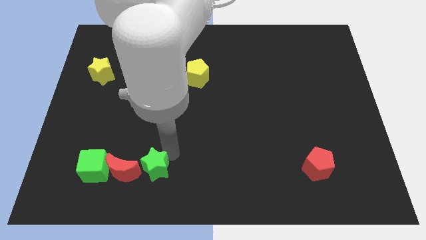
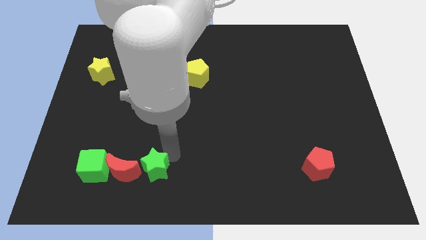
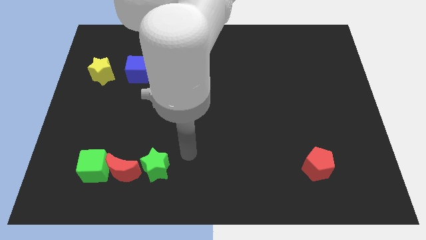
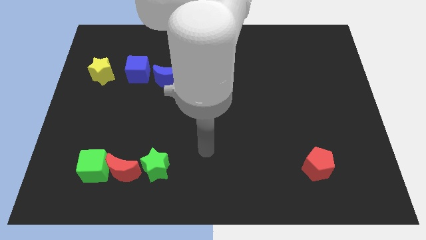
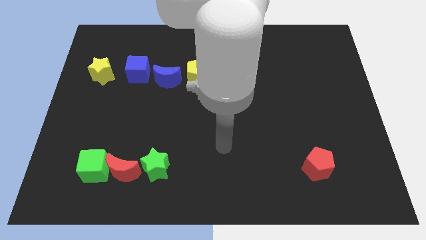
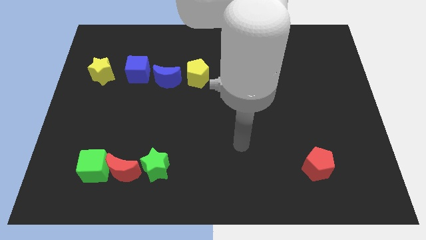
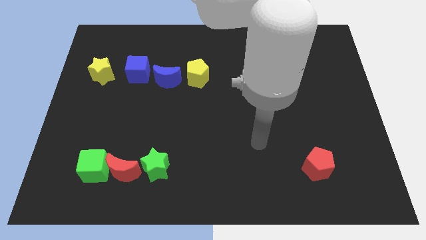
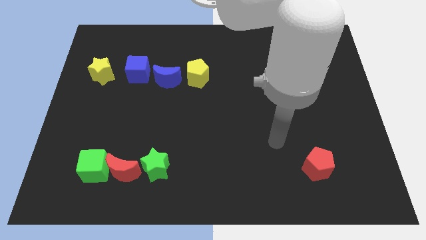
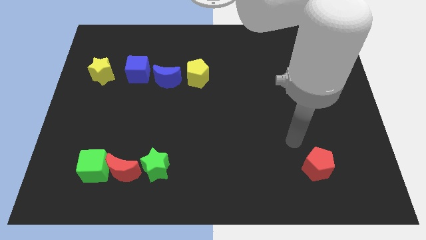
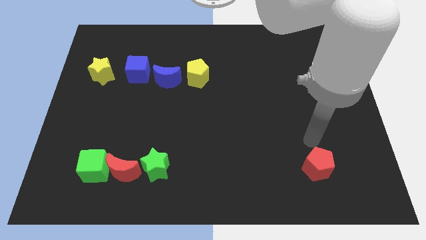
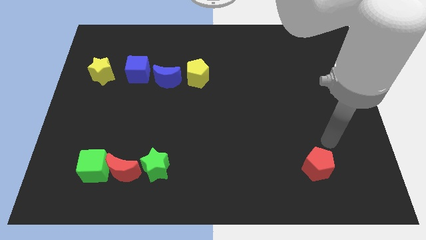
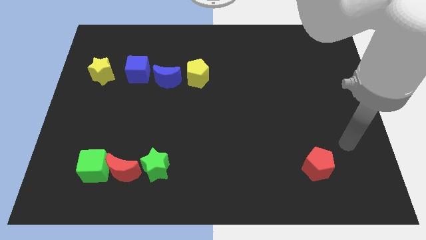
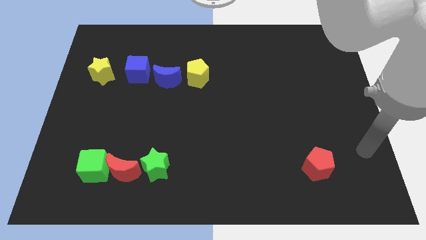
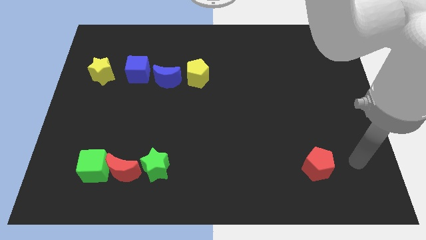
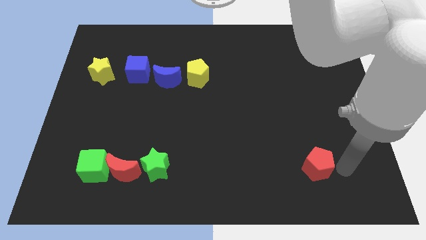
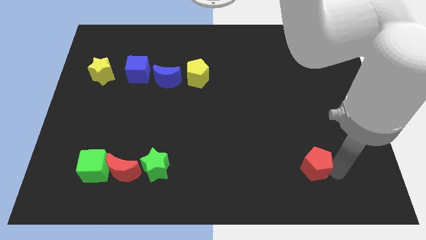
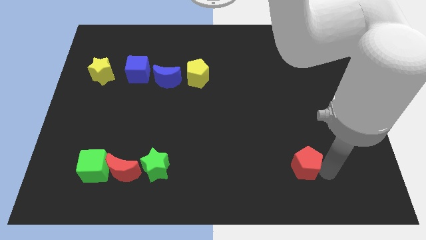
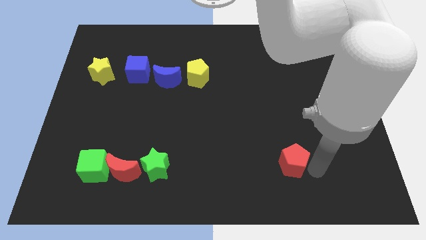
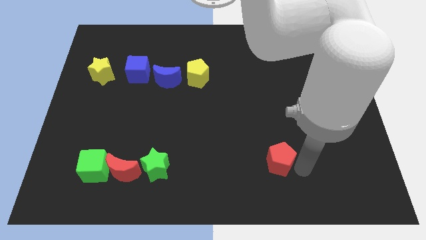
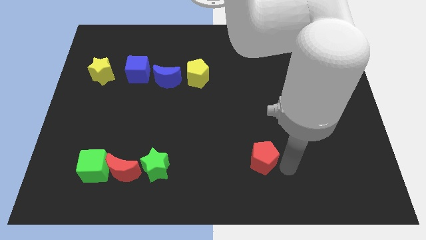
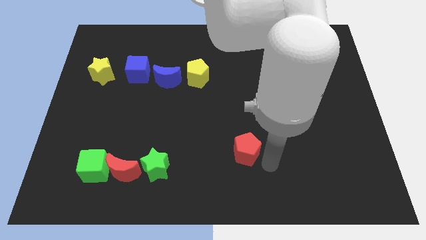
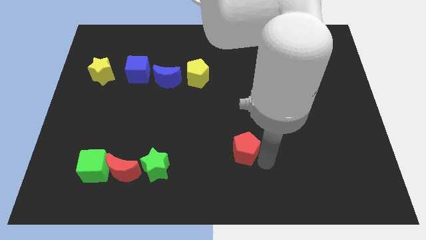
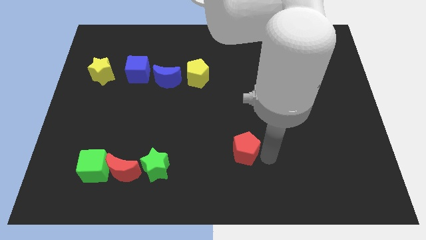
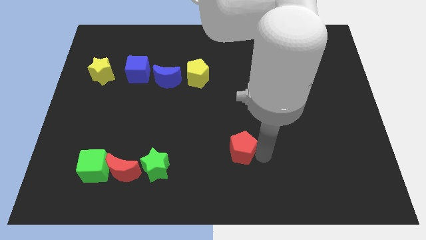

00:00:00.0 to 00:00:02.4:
move slightly the red pentagon to the left

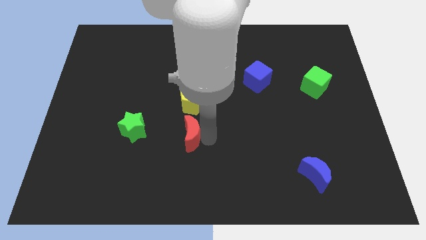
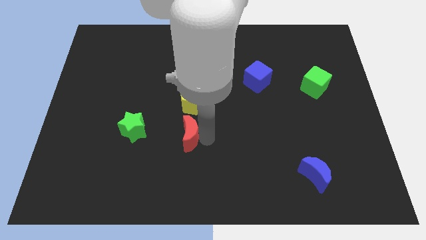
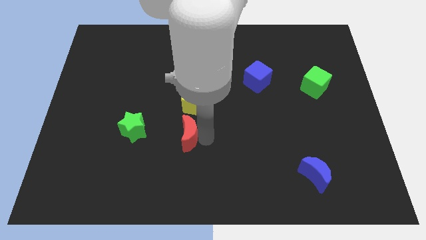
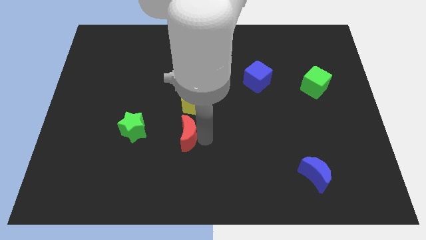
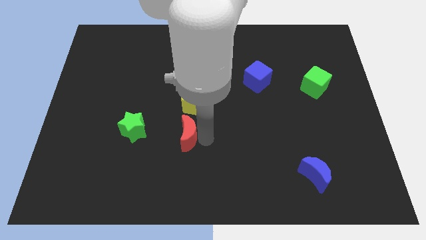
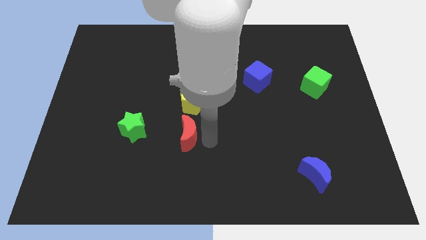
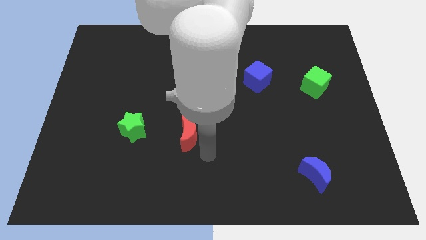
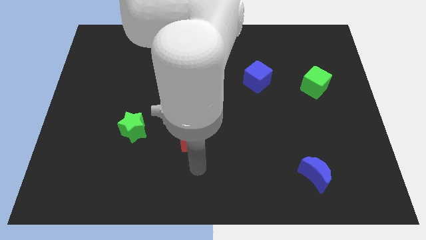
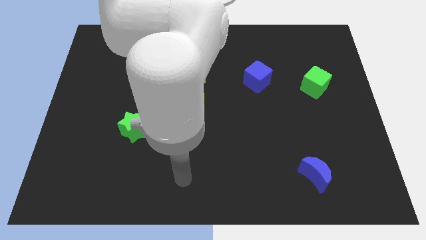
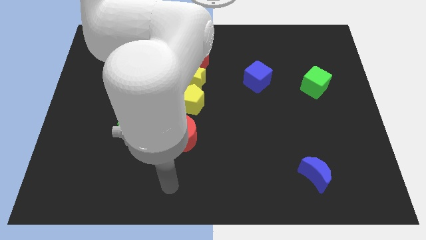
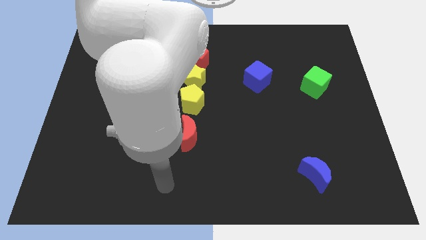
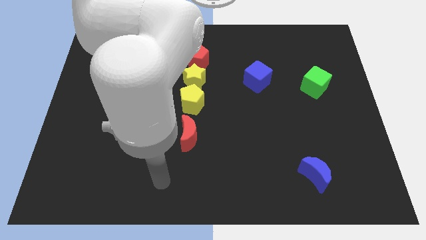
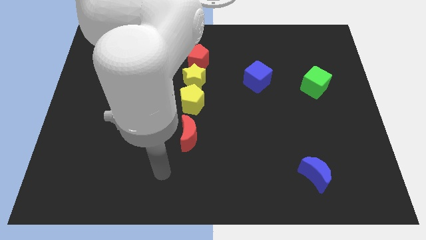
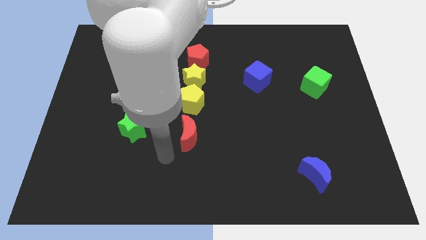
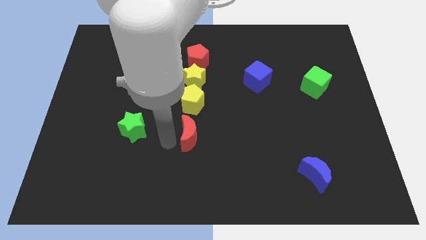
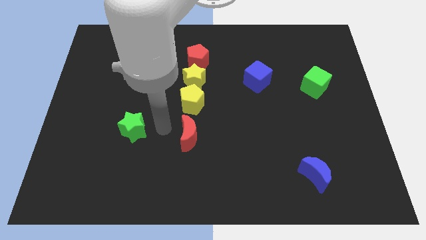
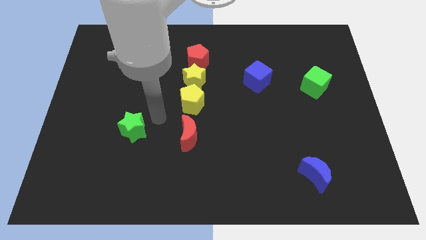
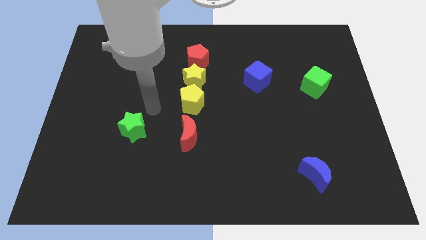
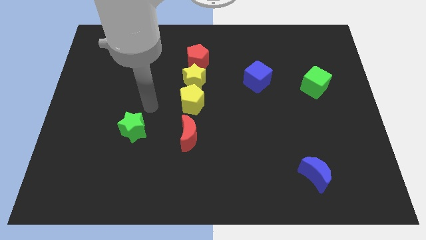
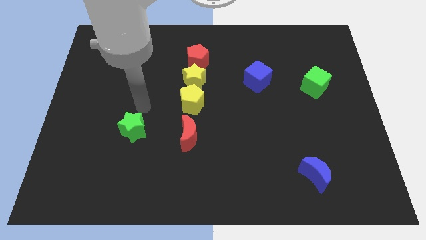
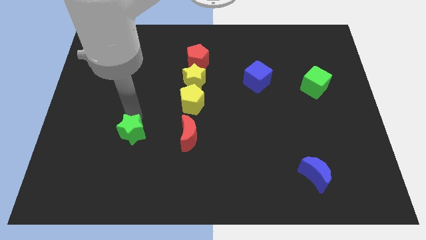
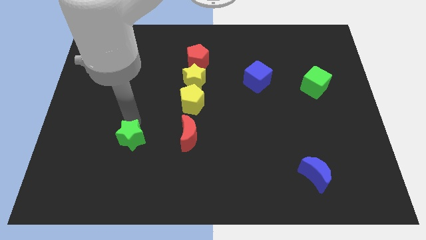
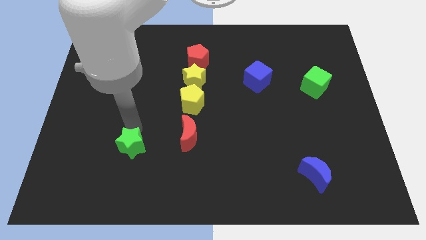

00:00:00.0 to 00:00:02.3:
place your arm towards the right side of green star

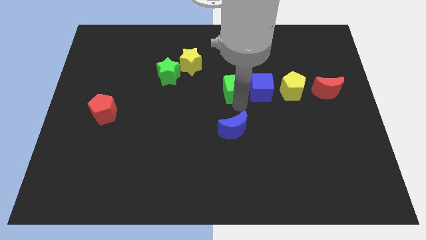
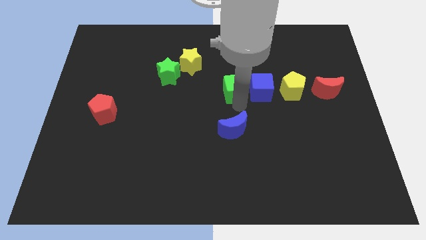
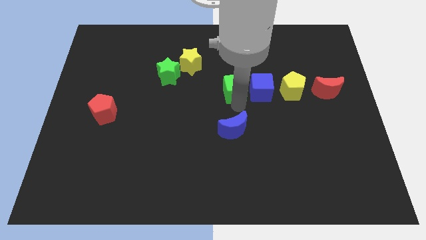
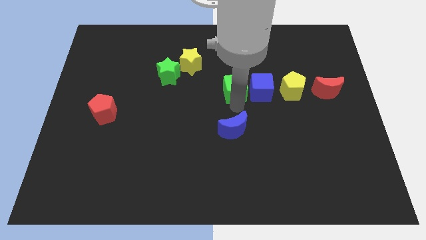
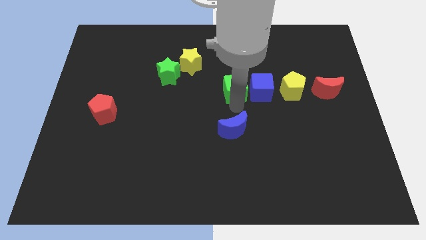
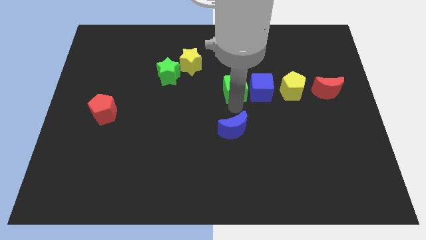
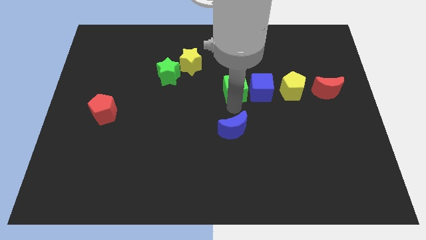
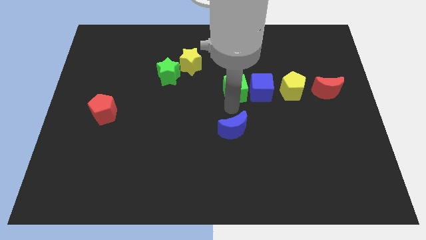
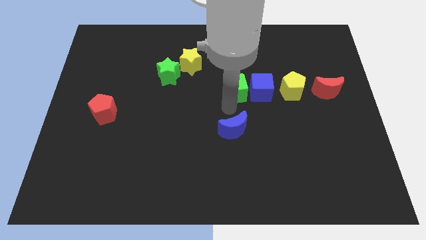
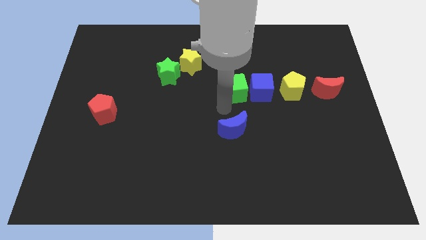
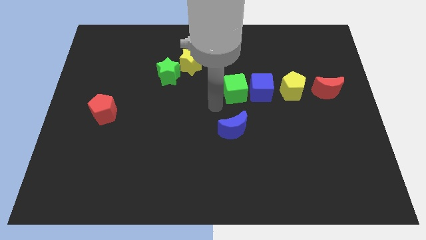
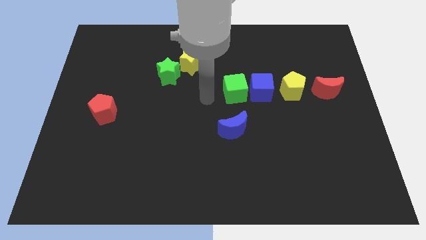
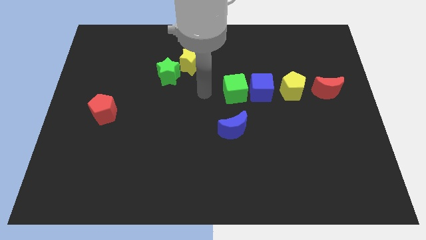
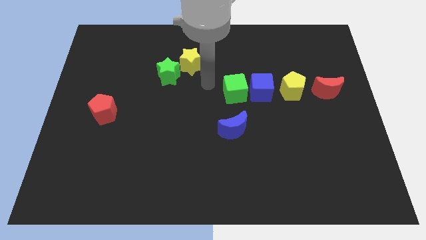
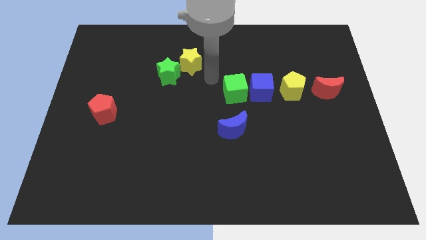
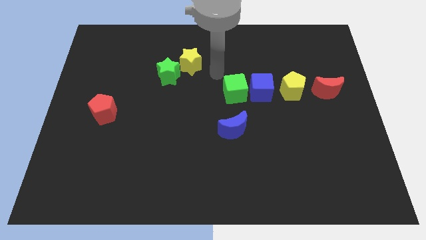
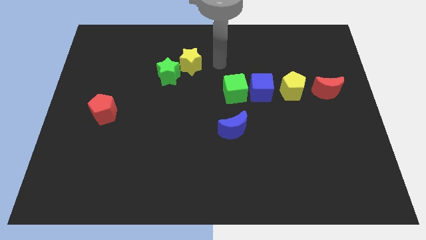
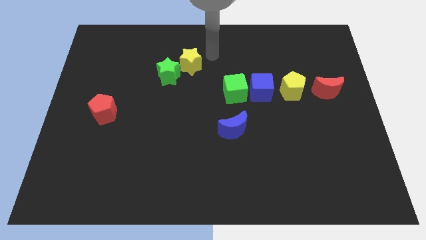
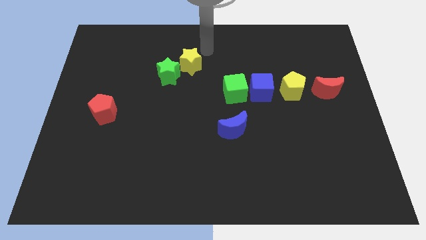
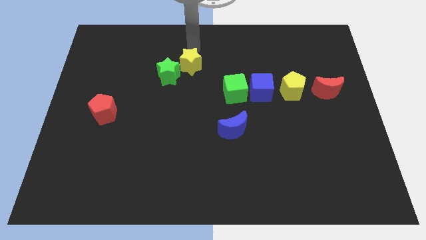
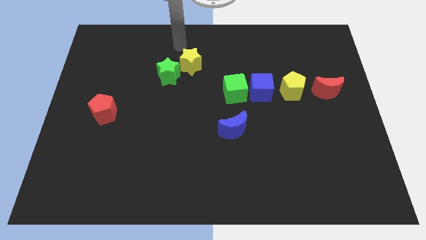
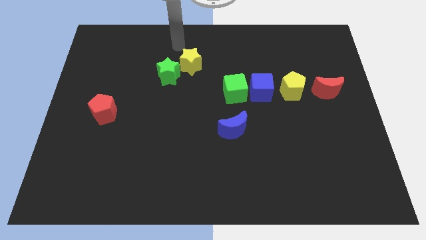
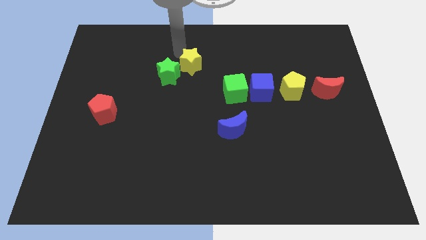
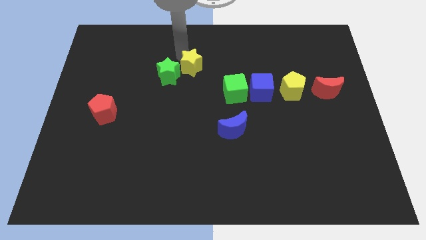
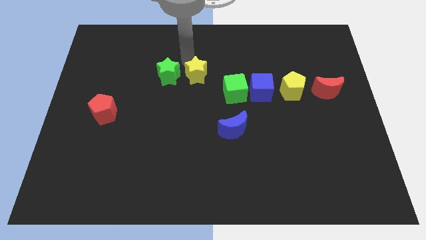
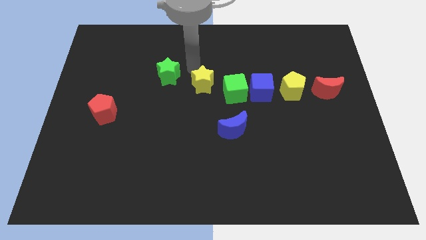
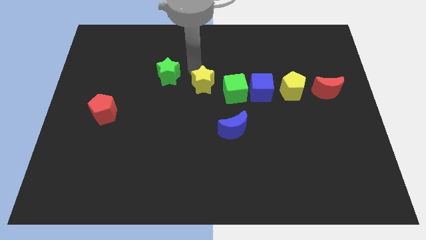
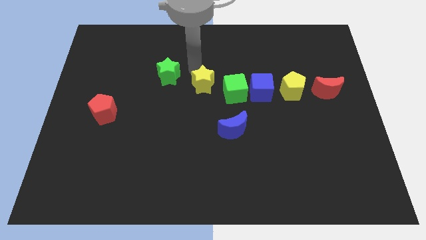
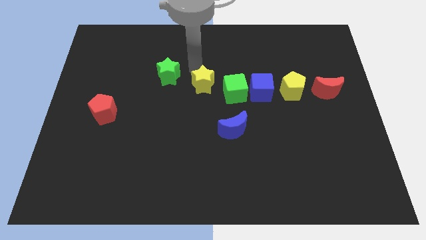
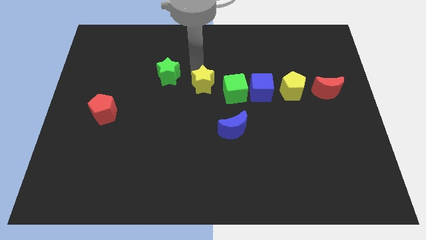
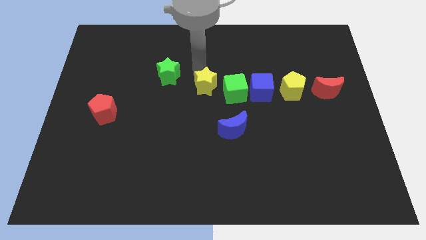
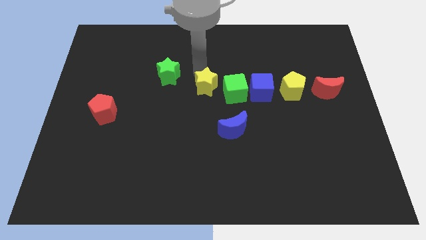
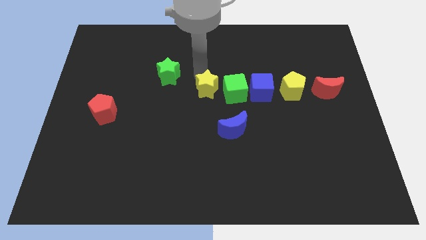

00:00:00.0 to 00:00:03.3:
push the yellow star to the top left side of the green cube

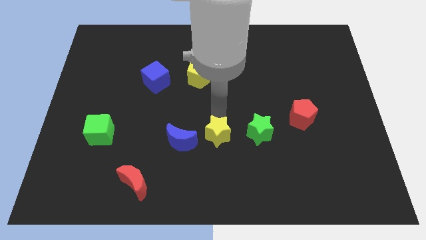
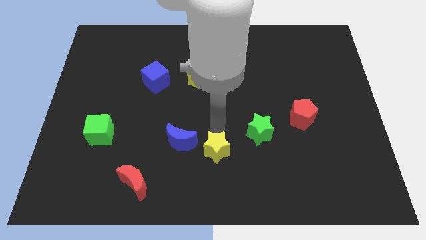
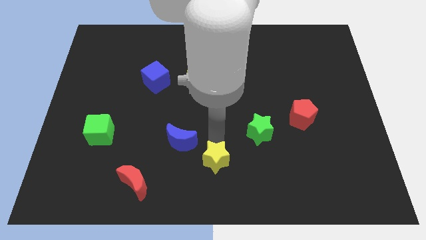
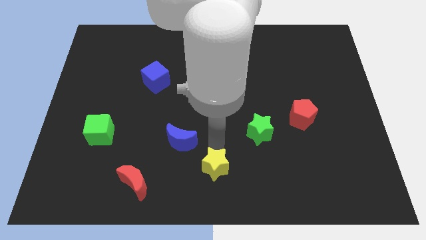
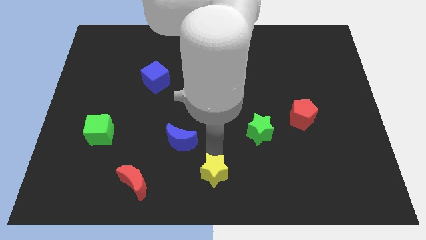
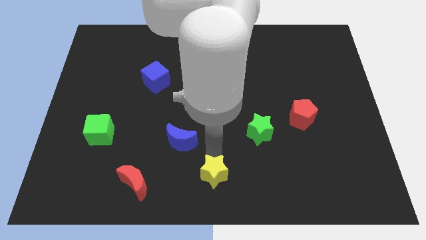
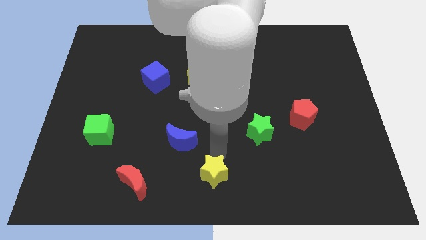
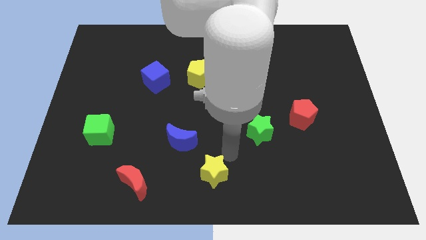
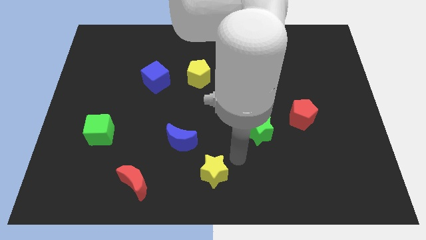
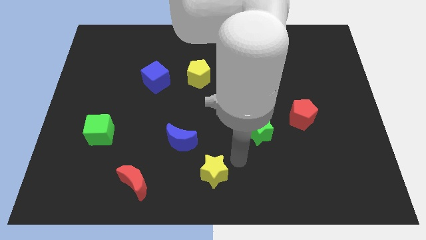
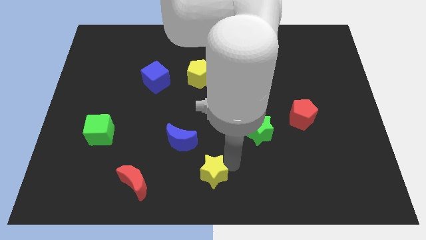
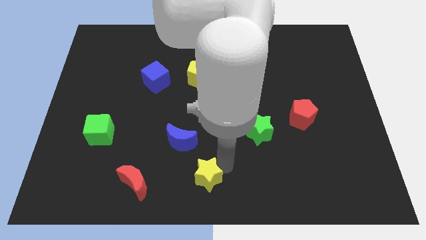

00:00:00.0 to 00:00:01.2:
push the yellow star towards the center bottom of the board

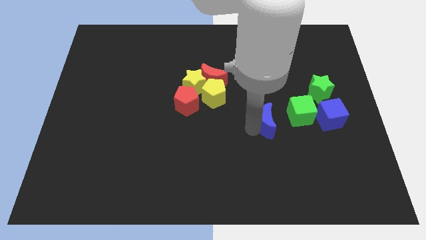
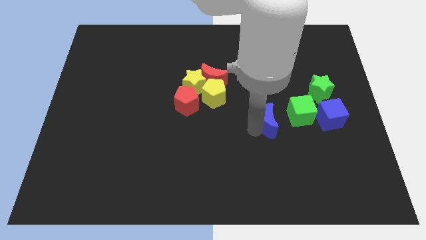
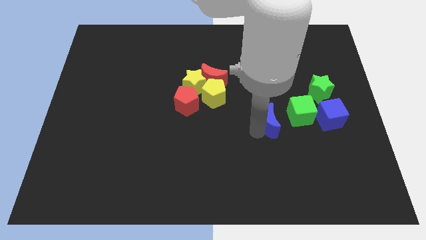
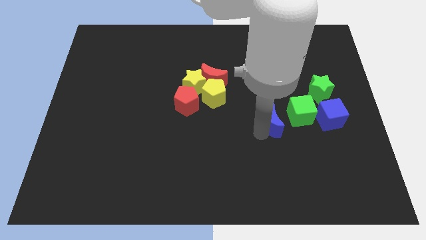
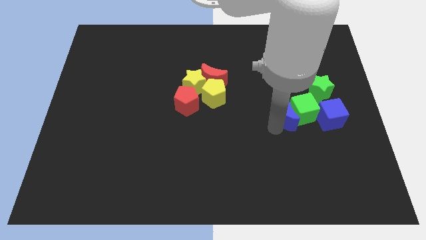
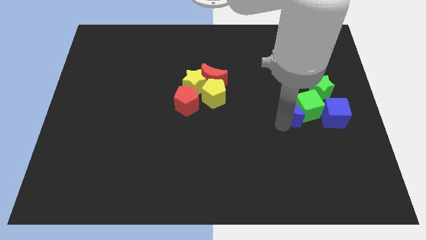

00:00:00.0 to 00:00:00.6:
push blue crescent into green cube
